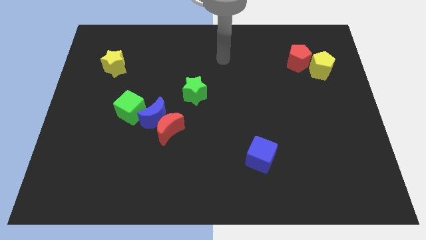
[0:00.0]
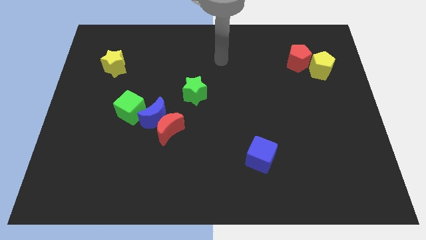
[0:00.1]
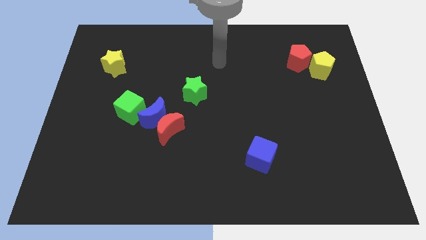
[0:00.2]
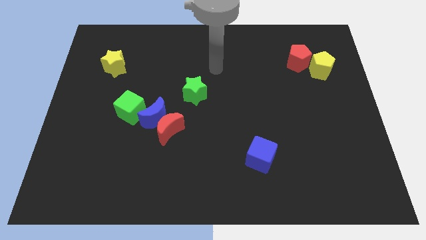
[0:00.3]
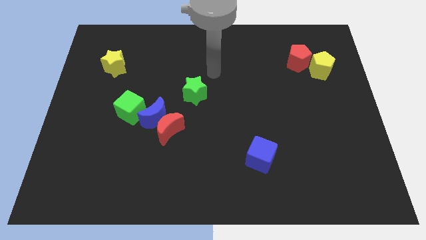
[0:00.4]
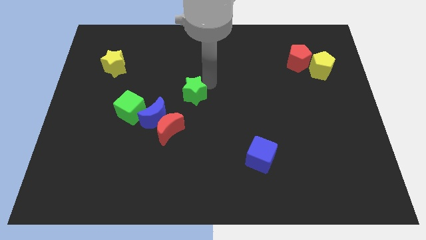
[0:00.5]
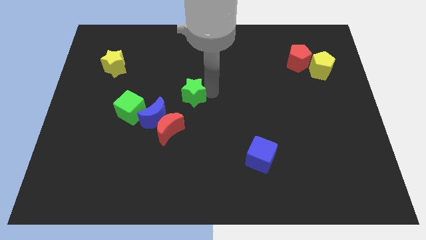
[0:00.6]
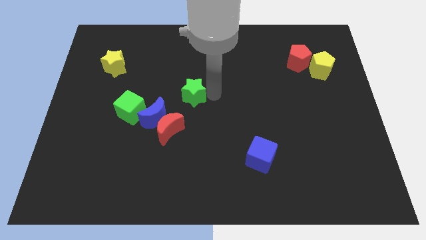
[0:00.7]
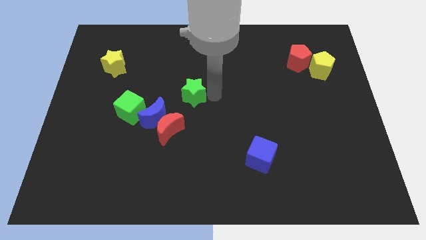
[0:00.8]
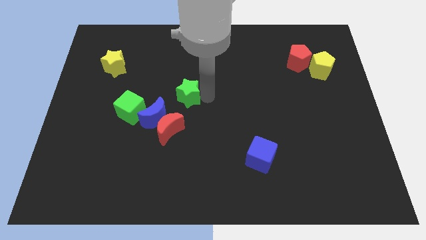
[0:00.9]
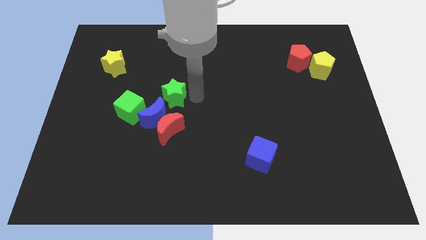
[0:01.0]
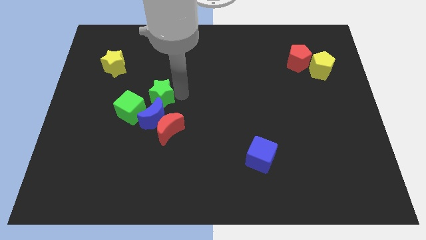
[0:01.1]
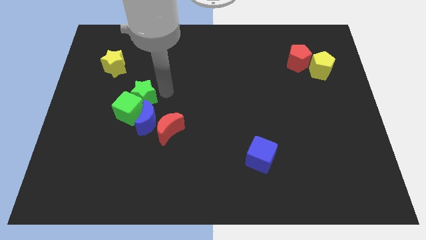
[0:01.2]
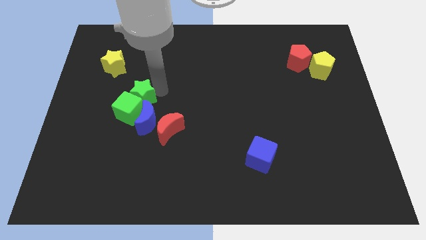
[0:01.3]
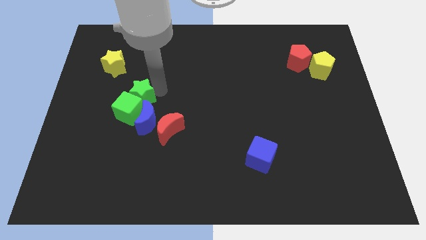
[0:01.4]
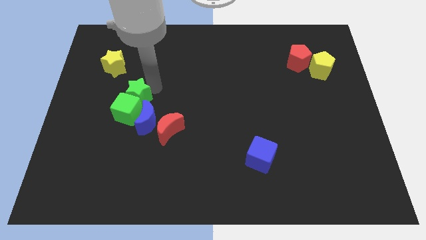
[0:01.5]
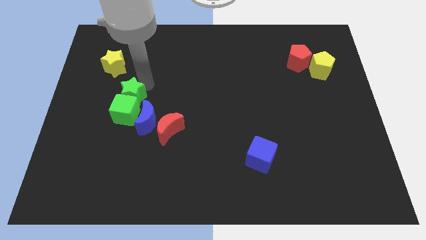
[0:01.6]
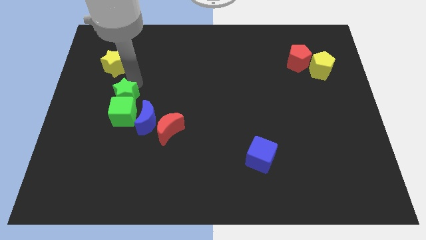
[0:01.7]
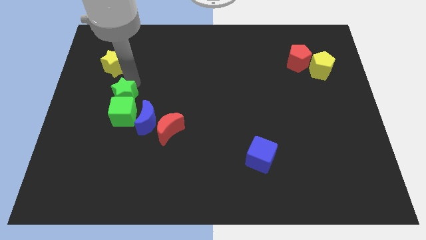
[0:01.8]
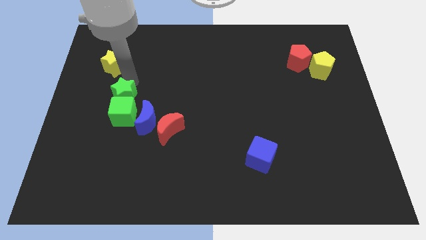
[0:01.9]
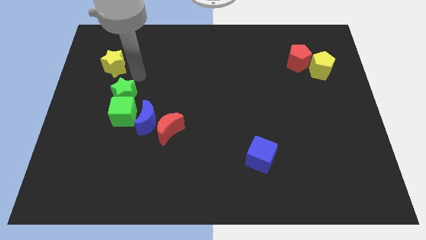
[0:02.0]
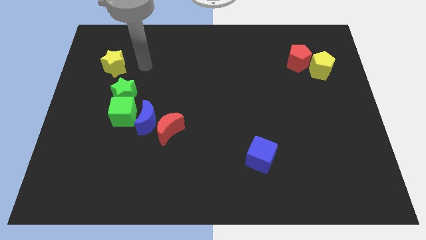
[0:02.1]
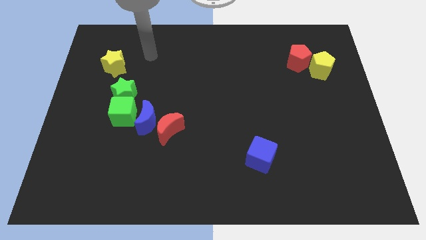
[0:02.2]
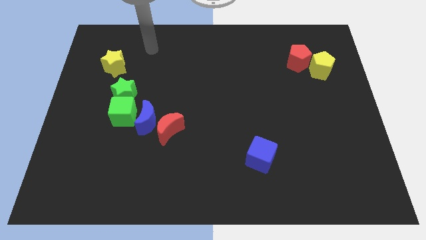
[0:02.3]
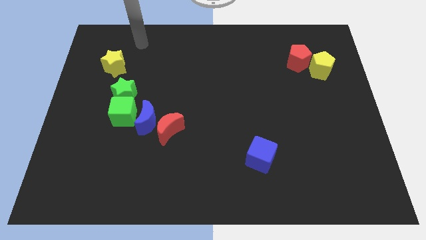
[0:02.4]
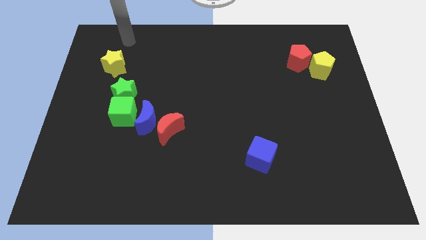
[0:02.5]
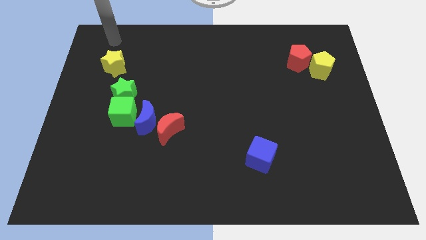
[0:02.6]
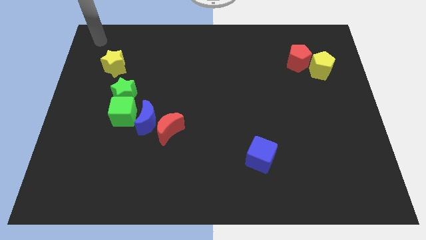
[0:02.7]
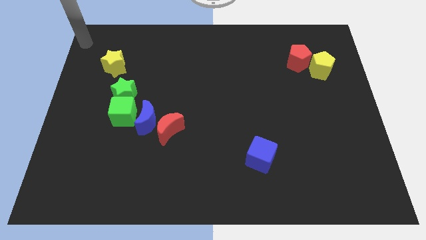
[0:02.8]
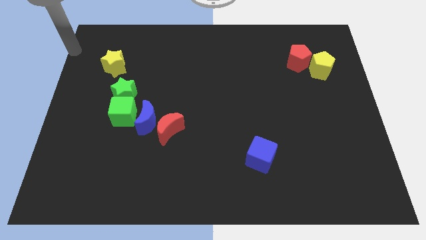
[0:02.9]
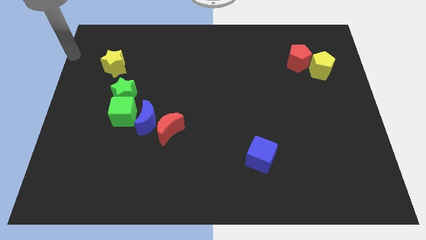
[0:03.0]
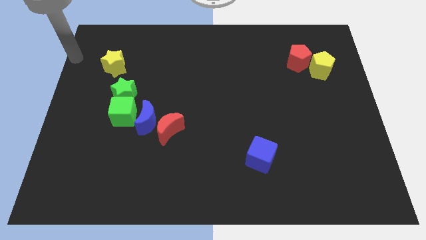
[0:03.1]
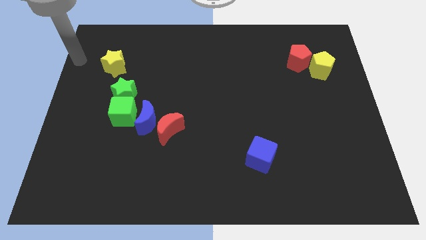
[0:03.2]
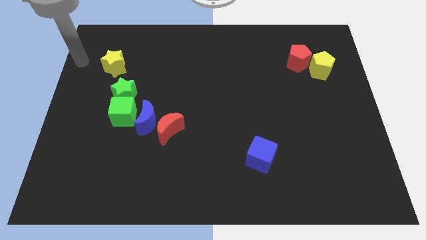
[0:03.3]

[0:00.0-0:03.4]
push the green star to the top side of the green cube

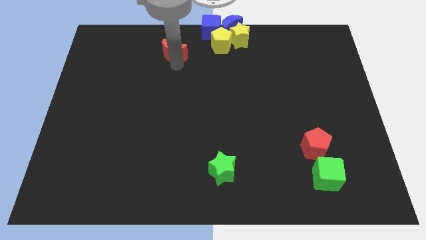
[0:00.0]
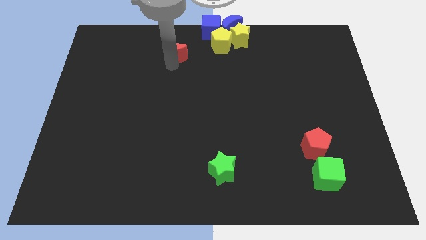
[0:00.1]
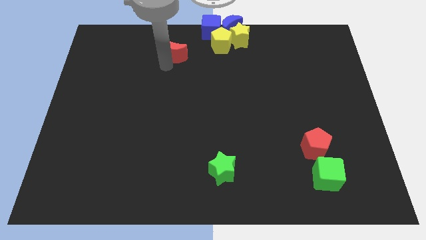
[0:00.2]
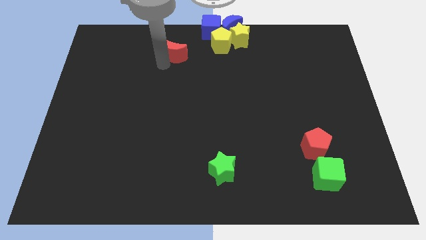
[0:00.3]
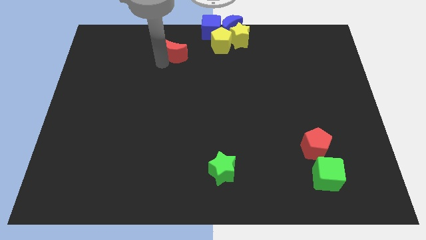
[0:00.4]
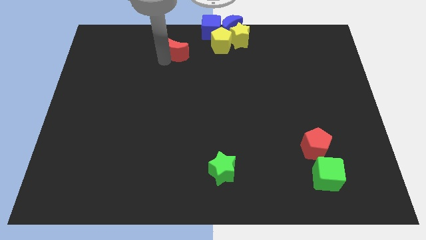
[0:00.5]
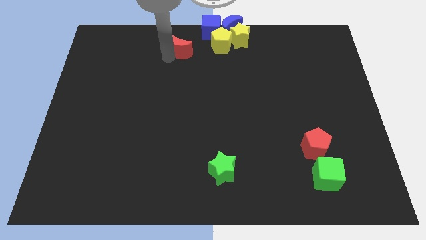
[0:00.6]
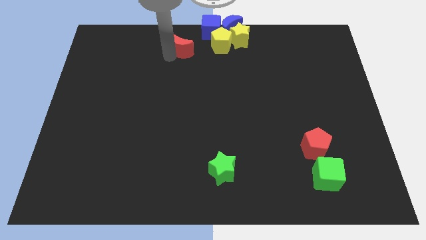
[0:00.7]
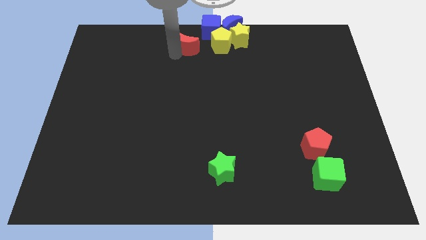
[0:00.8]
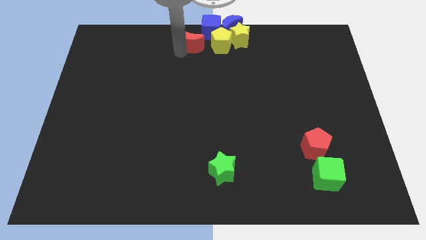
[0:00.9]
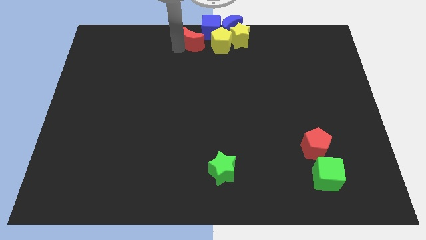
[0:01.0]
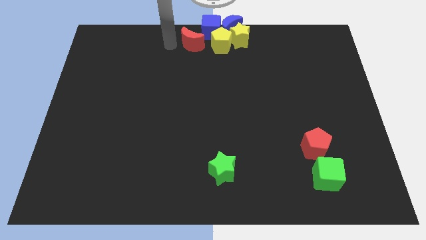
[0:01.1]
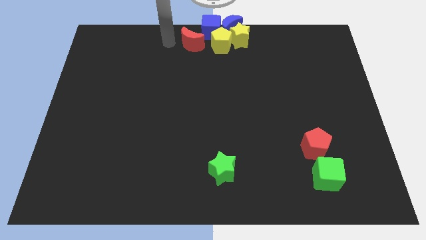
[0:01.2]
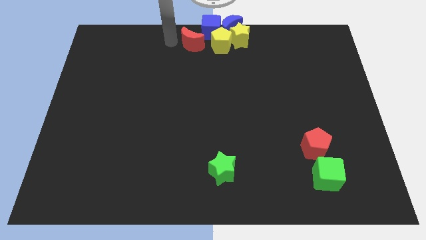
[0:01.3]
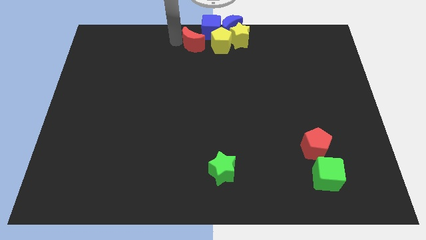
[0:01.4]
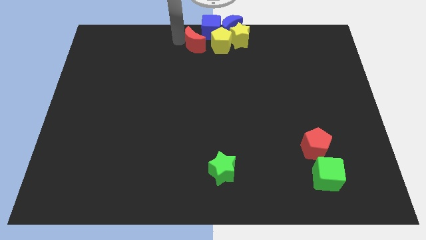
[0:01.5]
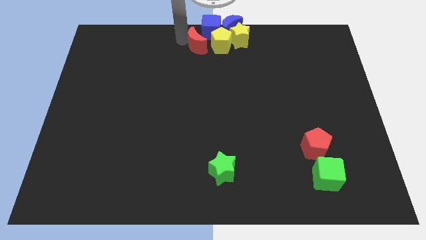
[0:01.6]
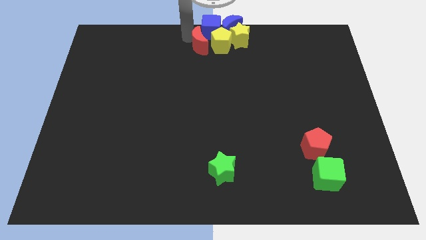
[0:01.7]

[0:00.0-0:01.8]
push the red crescent to the left of the yellow pentagon

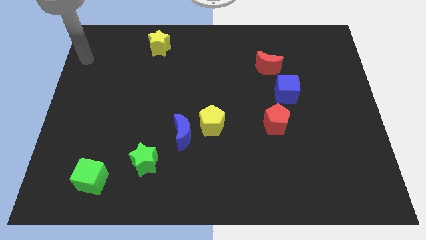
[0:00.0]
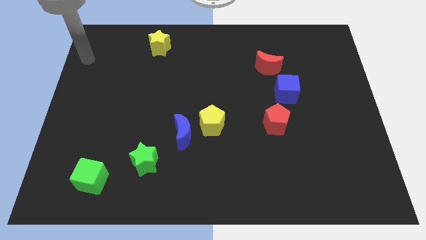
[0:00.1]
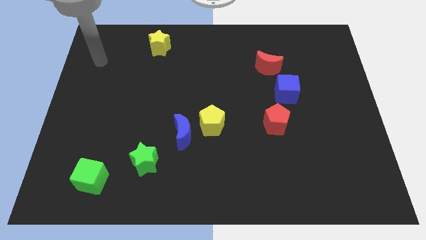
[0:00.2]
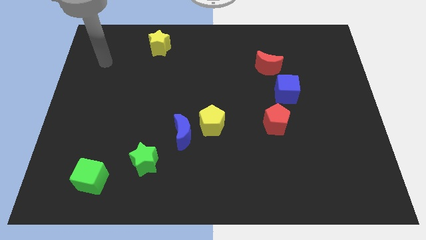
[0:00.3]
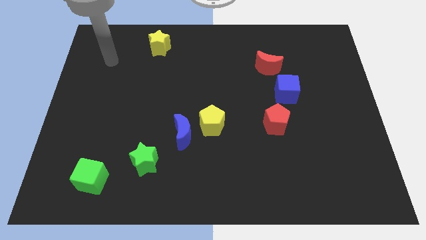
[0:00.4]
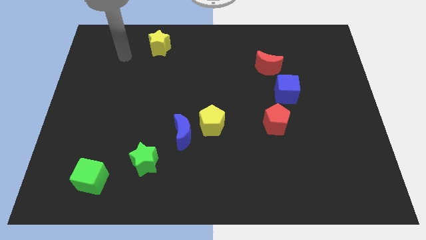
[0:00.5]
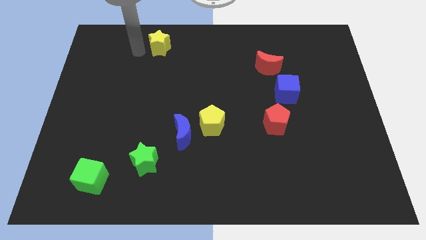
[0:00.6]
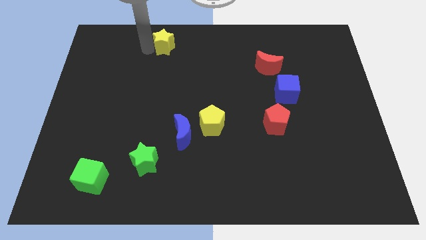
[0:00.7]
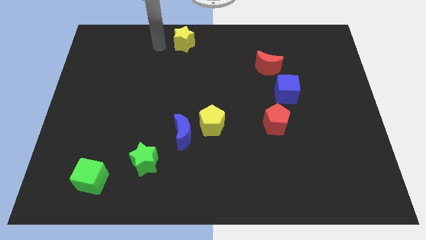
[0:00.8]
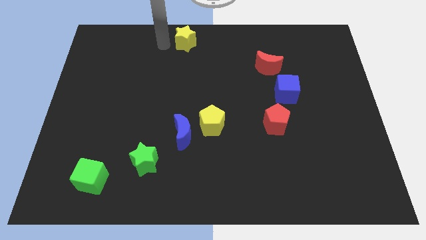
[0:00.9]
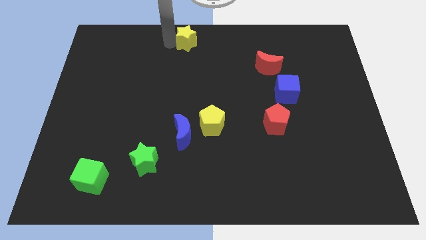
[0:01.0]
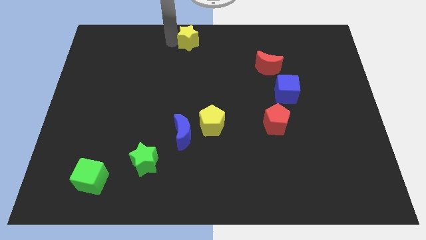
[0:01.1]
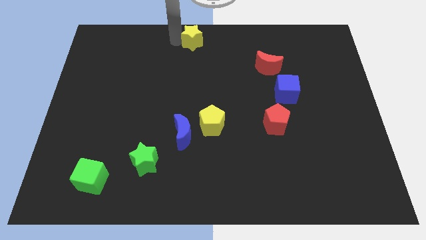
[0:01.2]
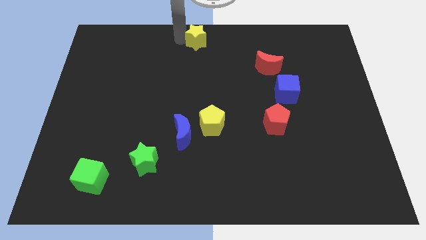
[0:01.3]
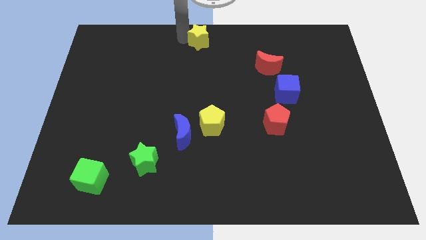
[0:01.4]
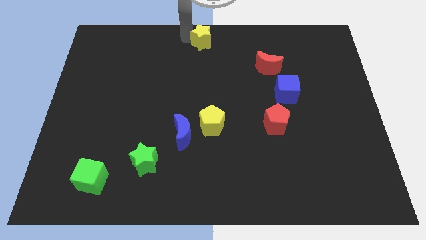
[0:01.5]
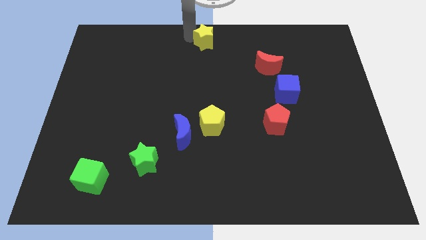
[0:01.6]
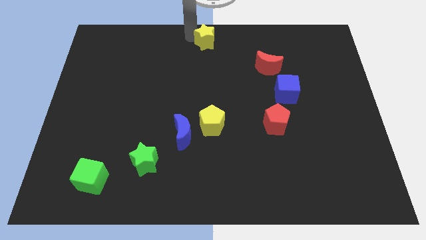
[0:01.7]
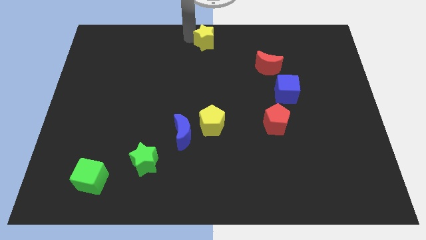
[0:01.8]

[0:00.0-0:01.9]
place the yellow star vertically above the yellow pentagon

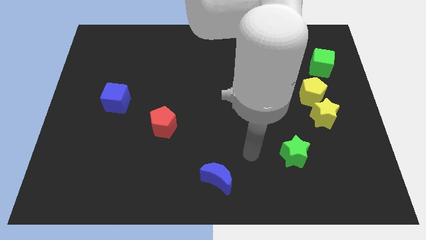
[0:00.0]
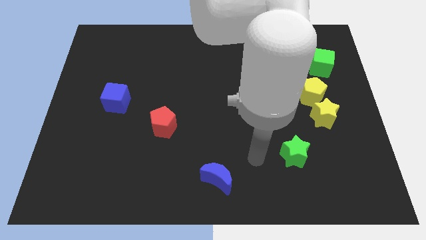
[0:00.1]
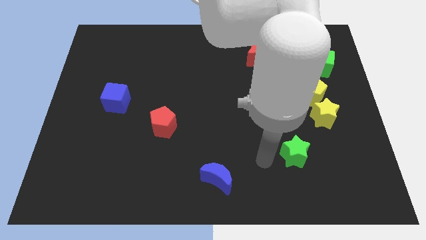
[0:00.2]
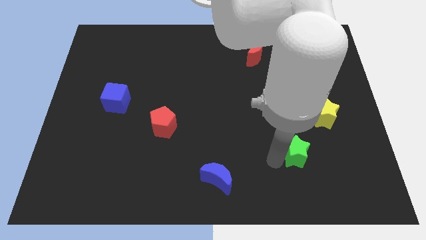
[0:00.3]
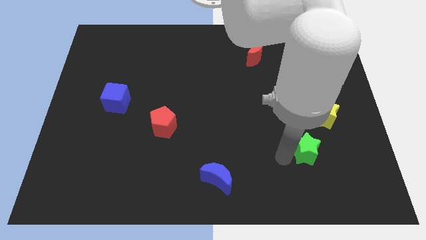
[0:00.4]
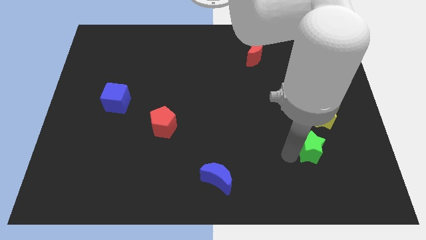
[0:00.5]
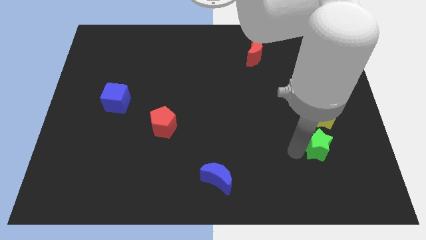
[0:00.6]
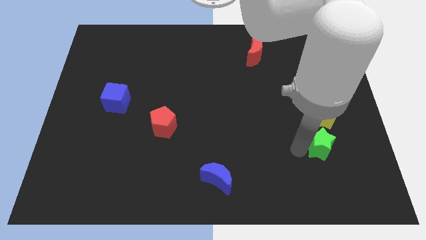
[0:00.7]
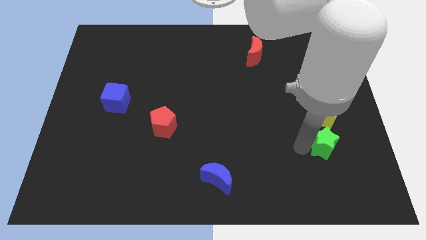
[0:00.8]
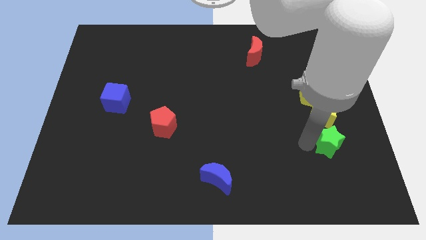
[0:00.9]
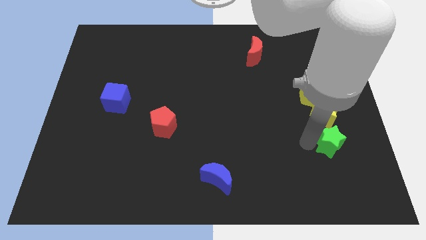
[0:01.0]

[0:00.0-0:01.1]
place the green star below the yellow star

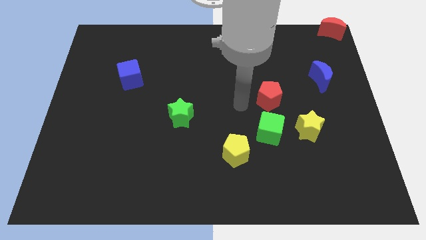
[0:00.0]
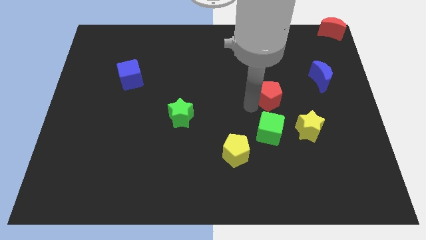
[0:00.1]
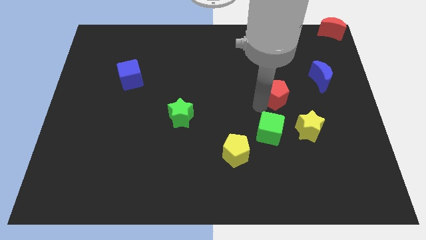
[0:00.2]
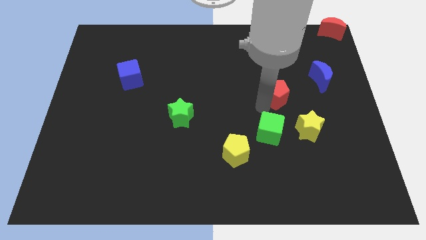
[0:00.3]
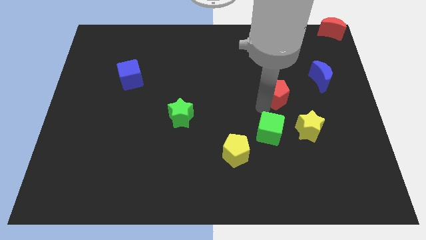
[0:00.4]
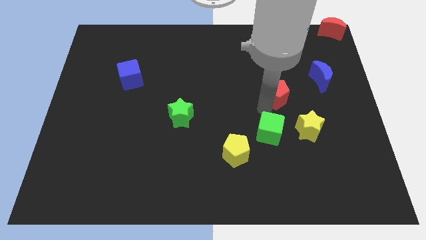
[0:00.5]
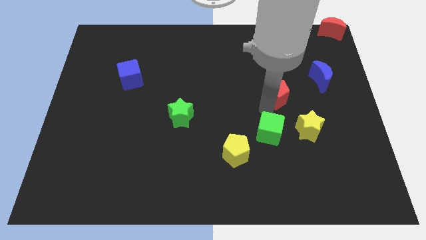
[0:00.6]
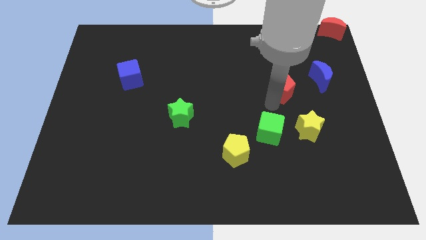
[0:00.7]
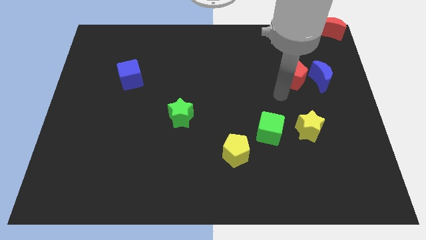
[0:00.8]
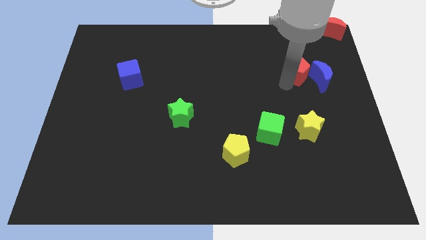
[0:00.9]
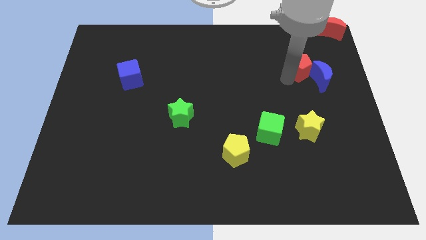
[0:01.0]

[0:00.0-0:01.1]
move red pentagon into blue moon
